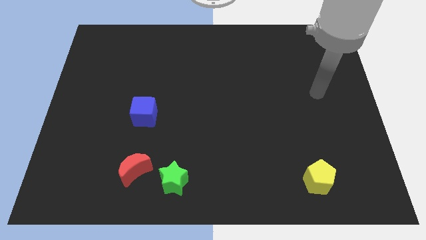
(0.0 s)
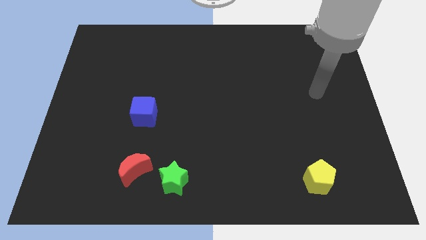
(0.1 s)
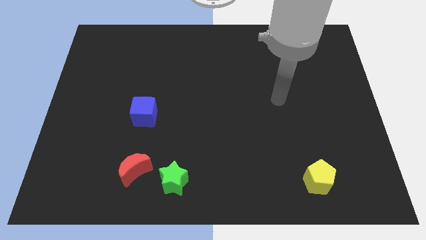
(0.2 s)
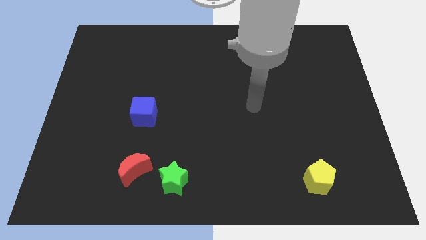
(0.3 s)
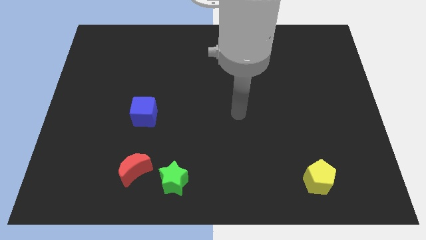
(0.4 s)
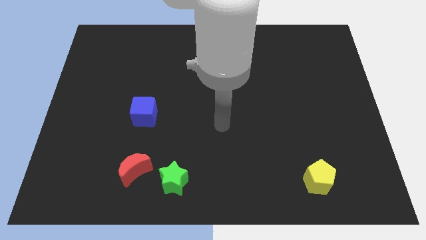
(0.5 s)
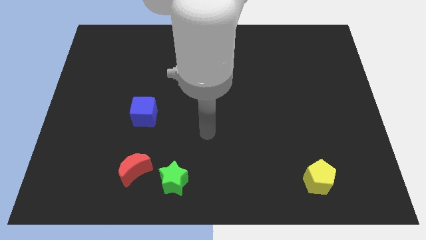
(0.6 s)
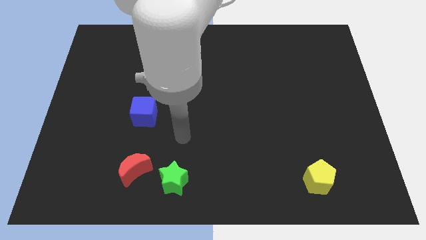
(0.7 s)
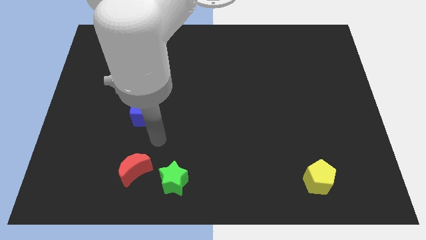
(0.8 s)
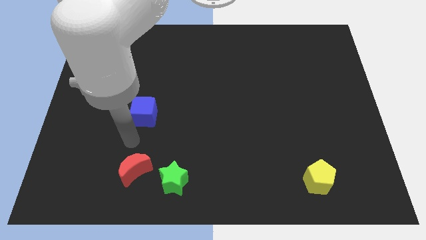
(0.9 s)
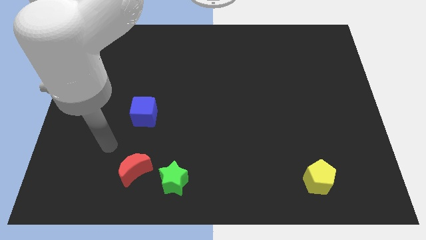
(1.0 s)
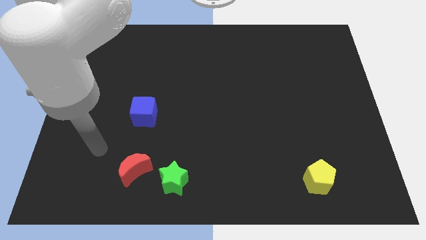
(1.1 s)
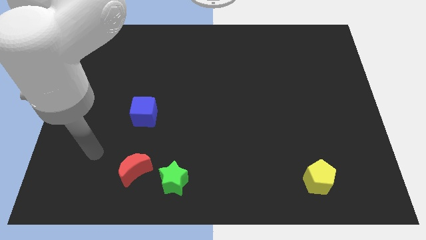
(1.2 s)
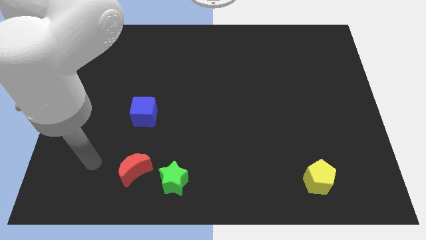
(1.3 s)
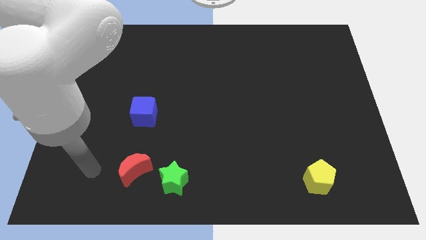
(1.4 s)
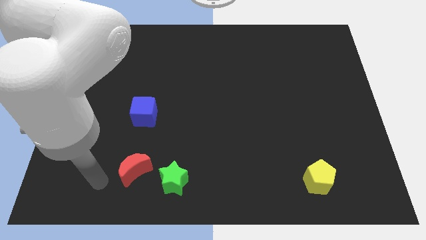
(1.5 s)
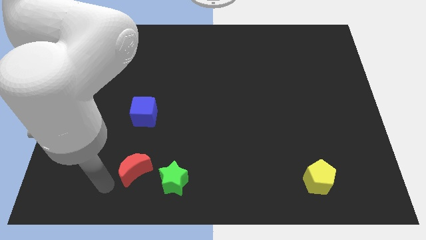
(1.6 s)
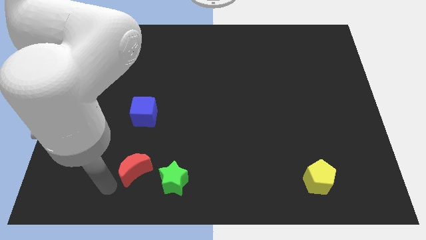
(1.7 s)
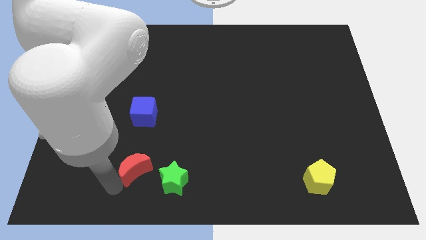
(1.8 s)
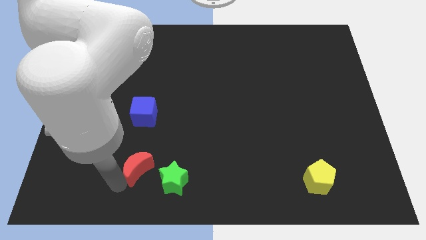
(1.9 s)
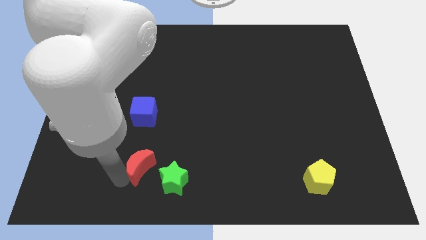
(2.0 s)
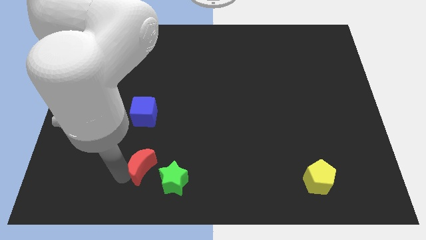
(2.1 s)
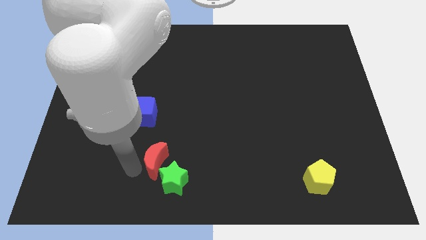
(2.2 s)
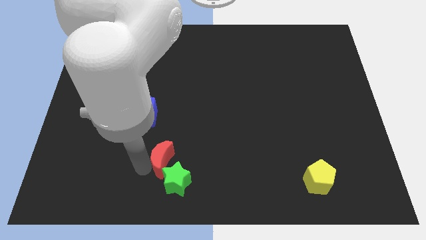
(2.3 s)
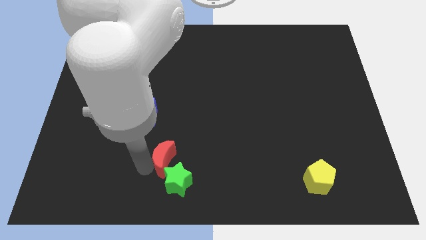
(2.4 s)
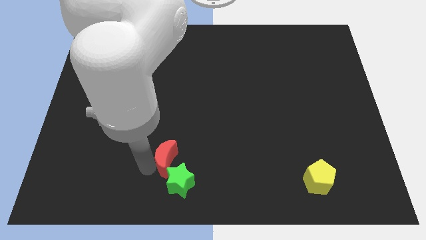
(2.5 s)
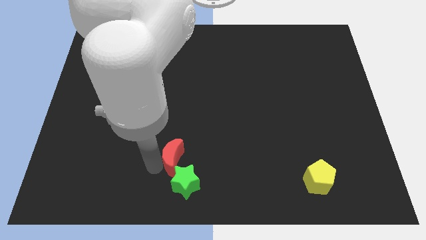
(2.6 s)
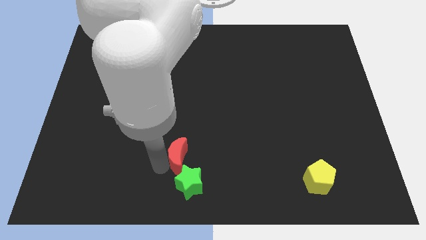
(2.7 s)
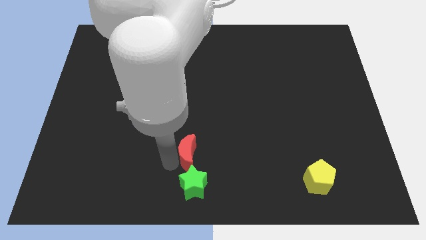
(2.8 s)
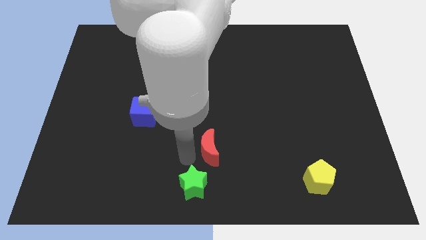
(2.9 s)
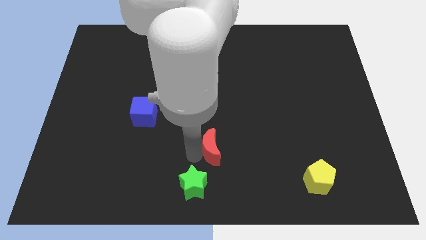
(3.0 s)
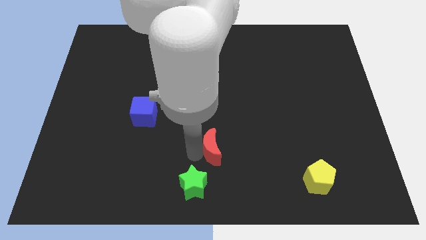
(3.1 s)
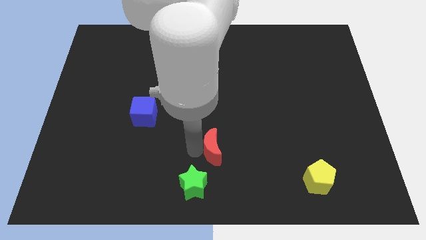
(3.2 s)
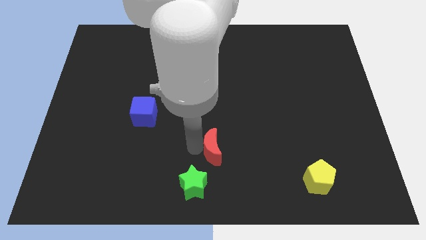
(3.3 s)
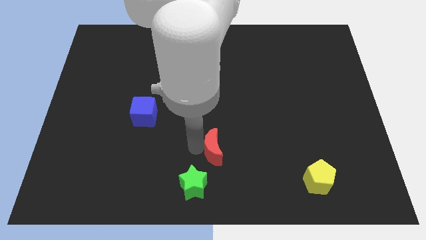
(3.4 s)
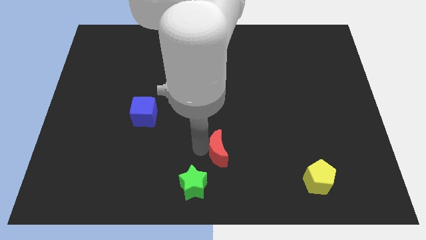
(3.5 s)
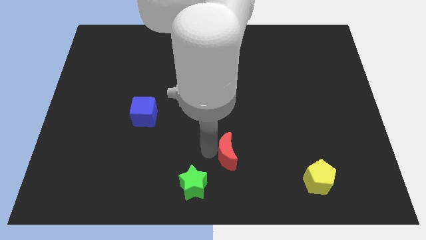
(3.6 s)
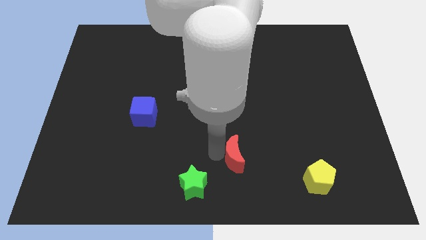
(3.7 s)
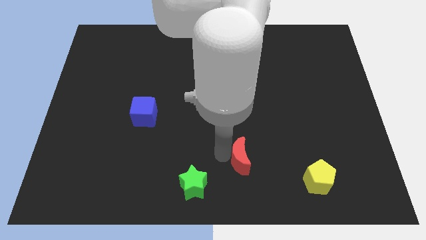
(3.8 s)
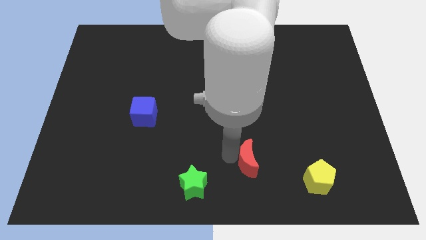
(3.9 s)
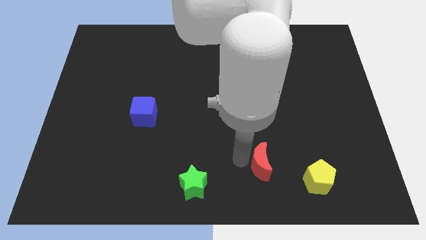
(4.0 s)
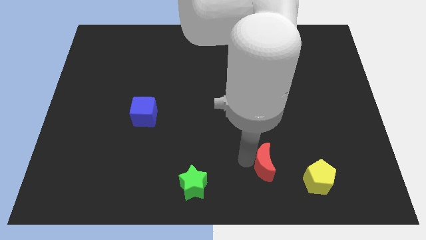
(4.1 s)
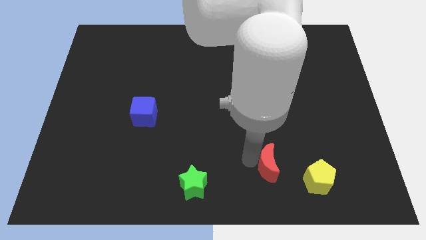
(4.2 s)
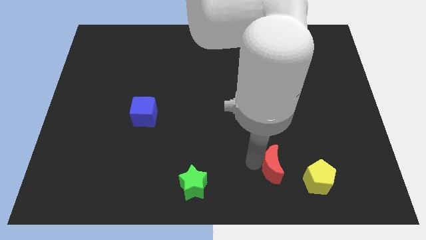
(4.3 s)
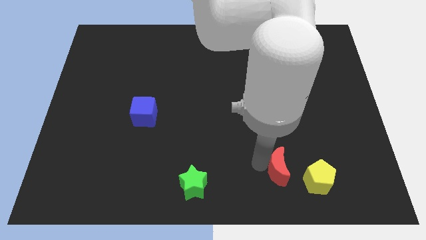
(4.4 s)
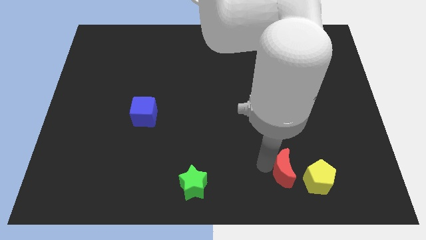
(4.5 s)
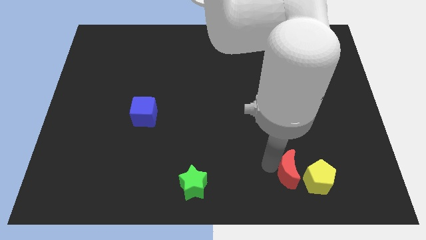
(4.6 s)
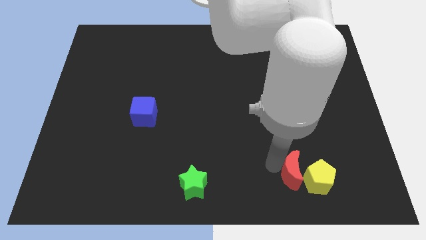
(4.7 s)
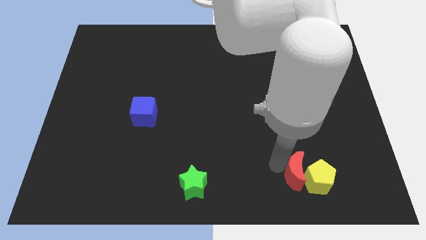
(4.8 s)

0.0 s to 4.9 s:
push the red block next to the yellow pentagon

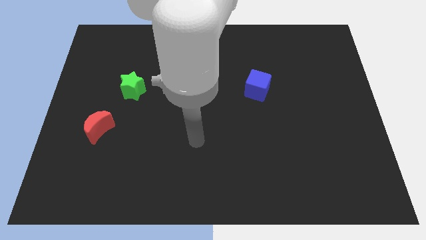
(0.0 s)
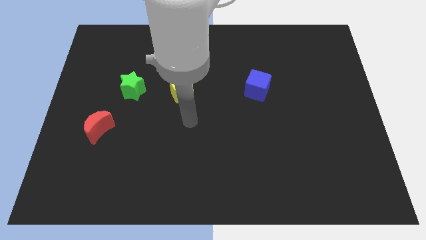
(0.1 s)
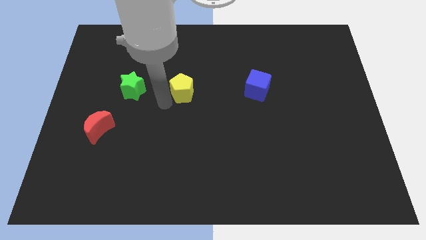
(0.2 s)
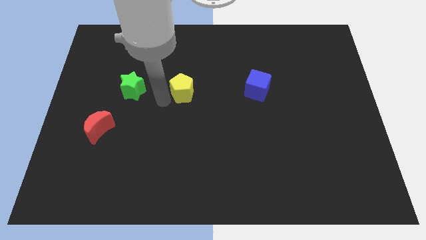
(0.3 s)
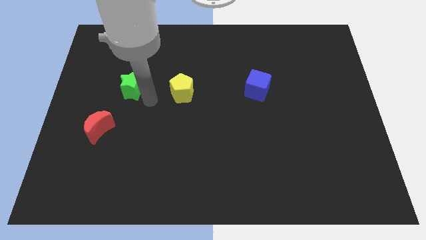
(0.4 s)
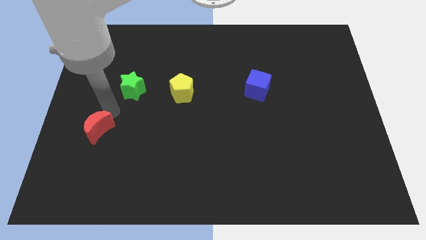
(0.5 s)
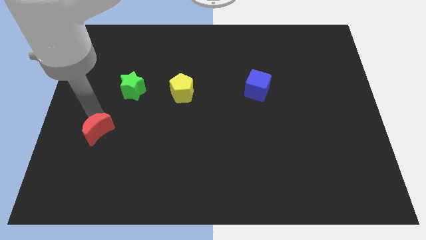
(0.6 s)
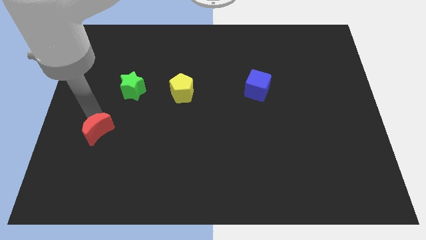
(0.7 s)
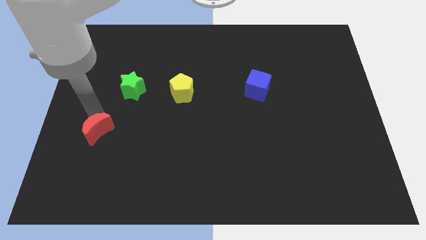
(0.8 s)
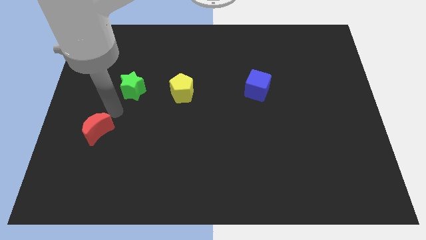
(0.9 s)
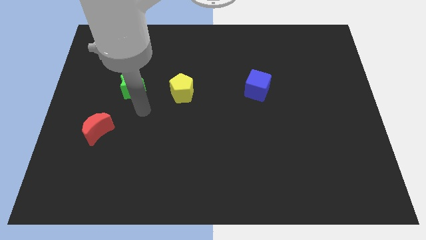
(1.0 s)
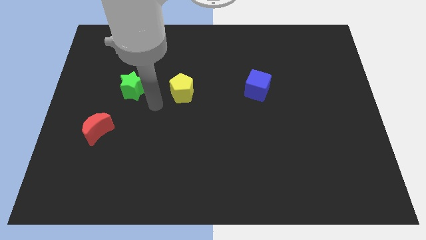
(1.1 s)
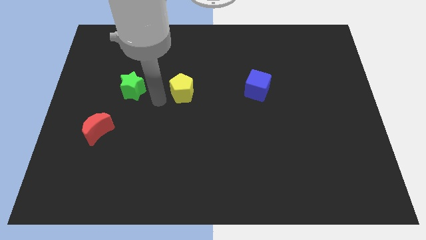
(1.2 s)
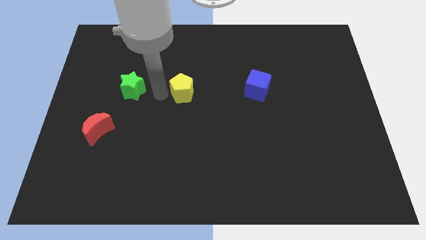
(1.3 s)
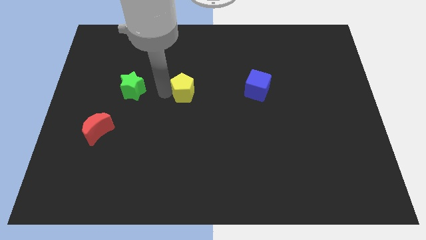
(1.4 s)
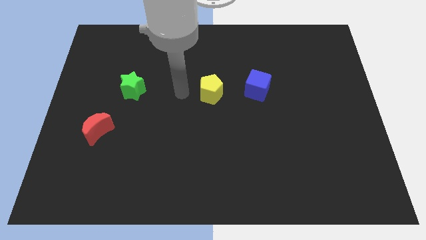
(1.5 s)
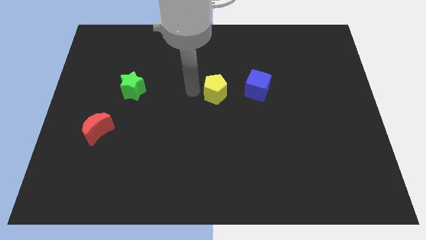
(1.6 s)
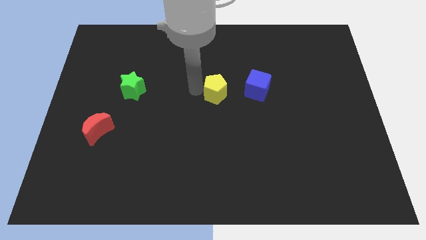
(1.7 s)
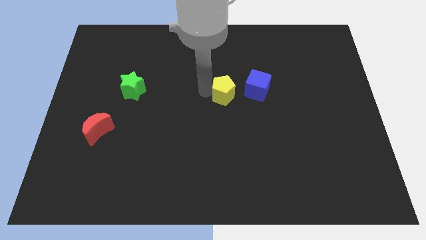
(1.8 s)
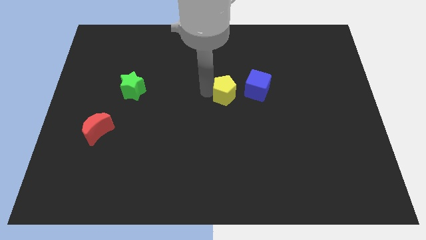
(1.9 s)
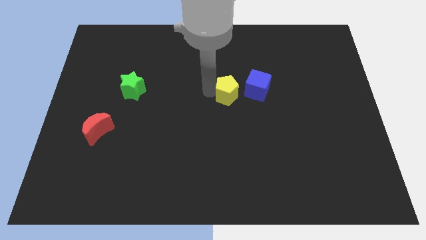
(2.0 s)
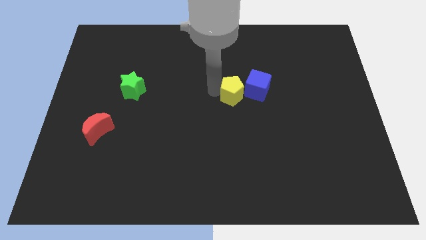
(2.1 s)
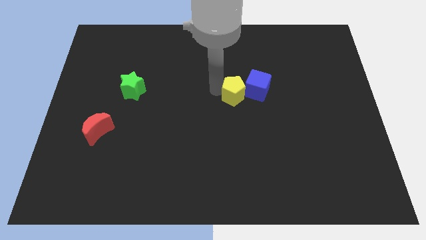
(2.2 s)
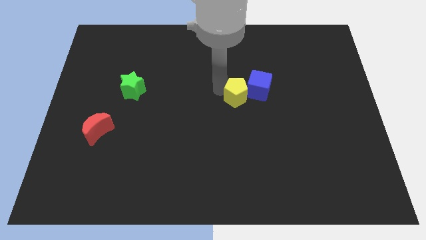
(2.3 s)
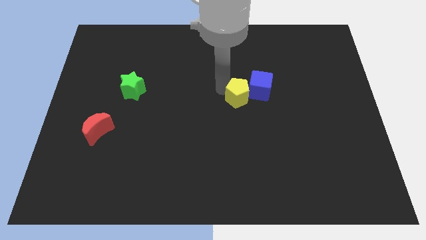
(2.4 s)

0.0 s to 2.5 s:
move the pentagon towards the blue block

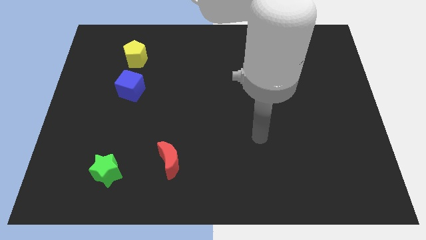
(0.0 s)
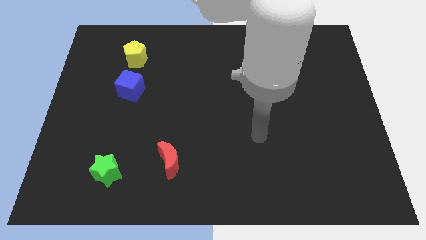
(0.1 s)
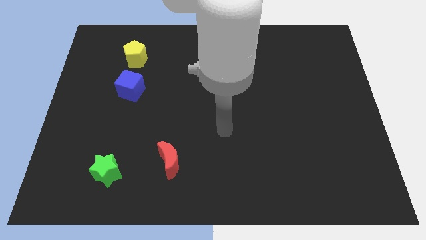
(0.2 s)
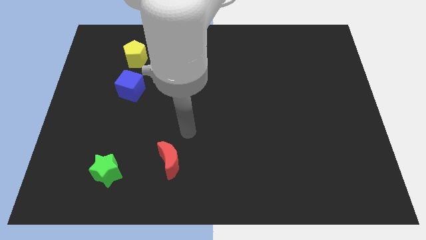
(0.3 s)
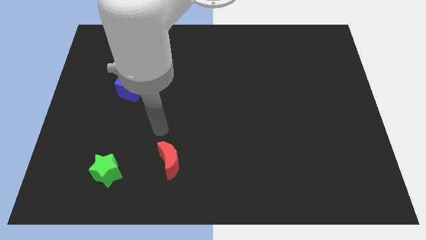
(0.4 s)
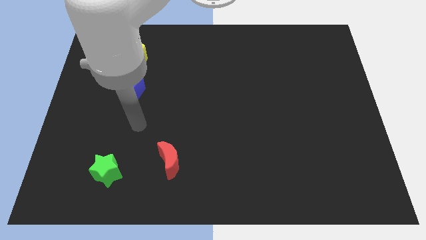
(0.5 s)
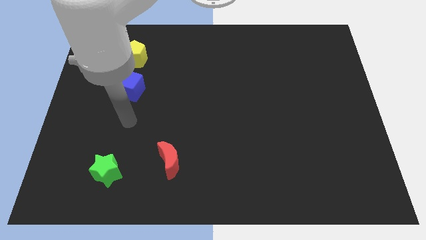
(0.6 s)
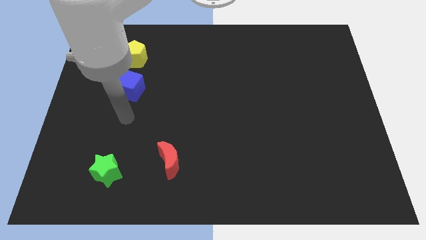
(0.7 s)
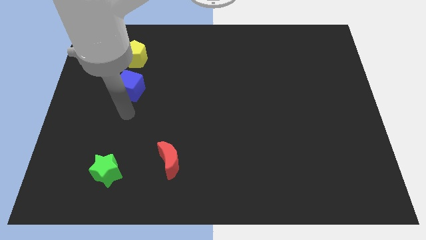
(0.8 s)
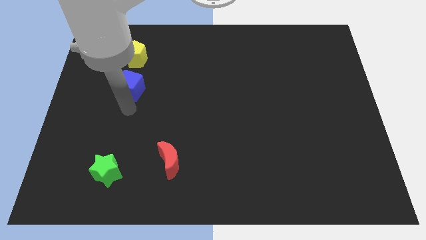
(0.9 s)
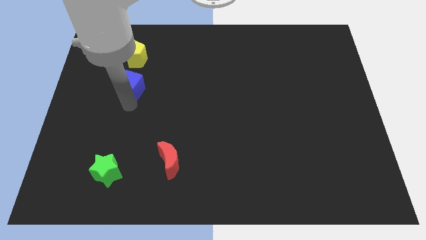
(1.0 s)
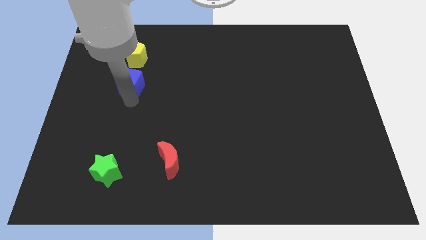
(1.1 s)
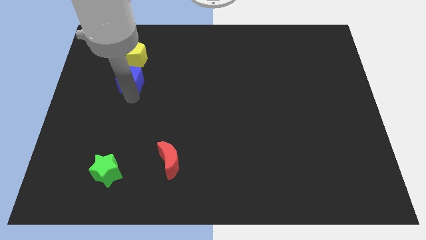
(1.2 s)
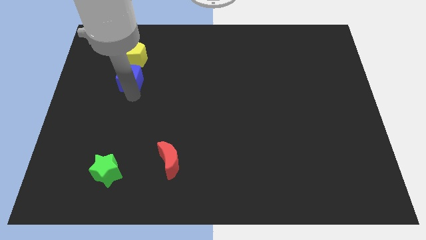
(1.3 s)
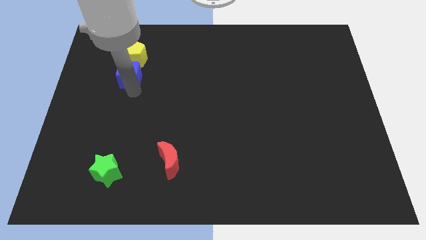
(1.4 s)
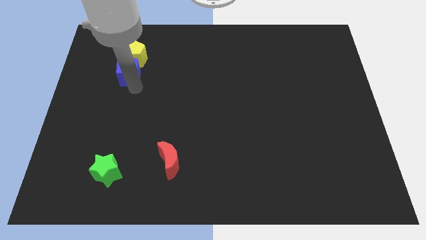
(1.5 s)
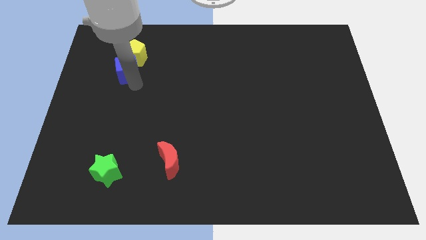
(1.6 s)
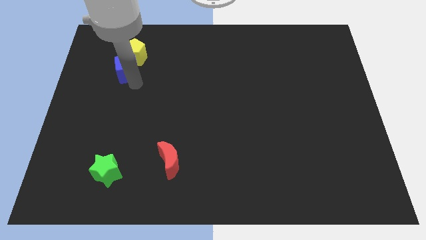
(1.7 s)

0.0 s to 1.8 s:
slide the blue block towards the yellow block
